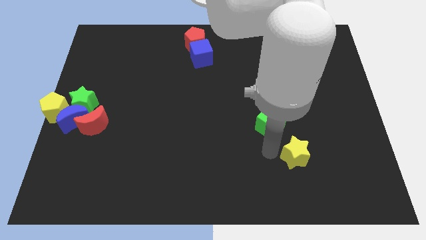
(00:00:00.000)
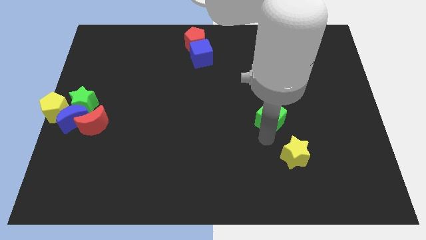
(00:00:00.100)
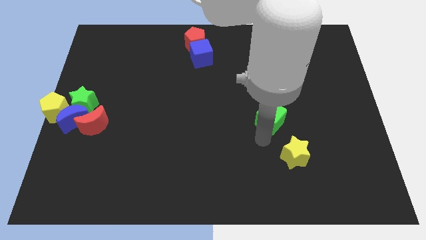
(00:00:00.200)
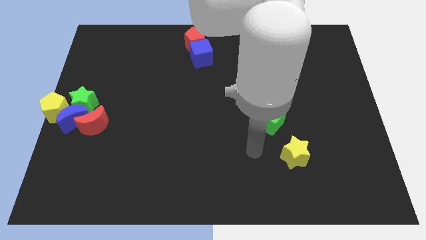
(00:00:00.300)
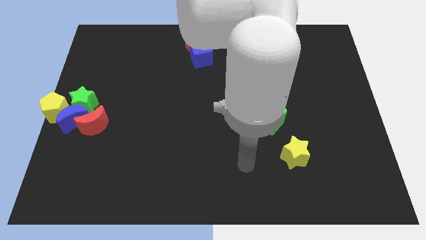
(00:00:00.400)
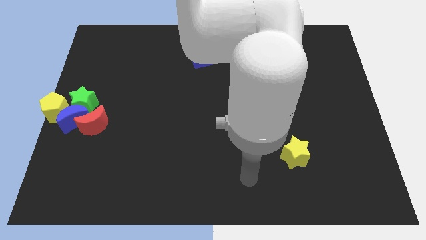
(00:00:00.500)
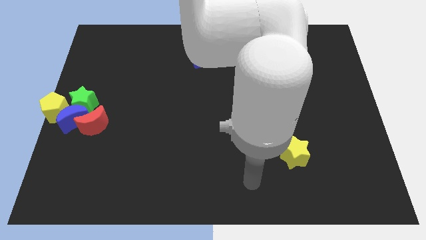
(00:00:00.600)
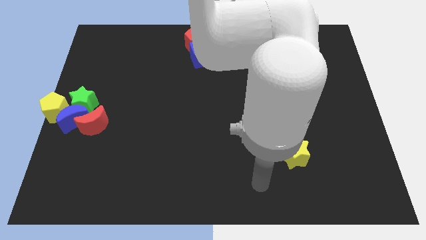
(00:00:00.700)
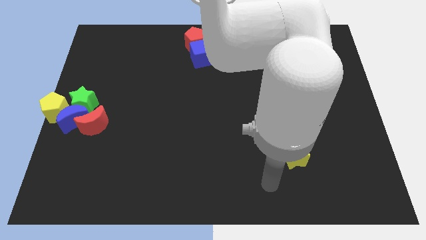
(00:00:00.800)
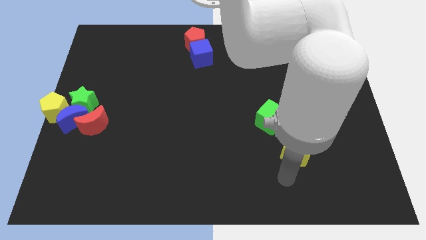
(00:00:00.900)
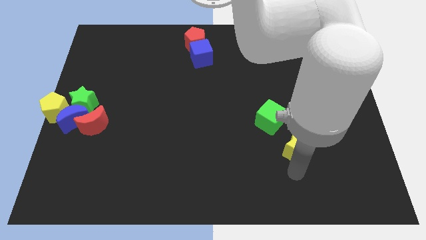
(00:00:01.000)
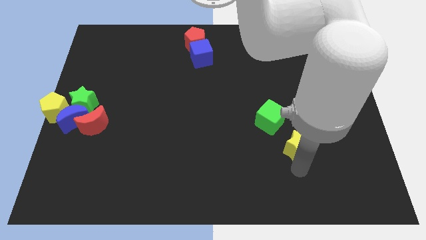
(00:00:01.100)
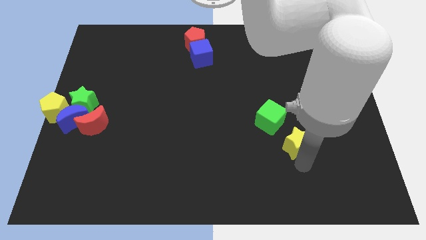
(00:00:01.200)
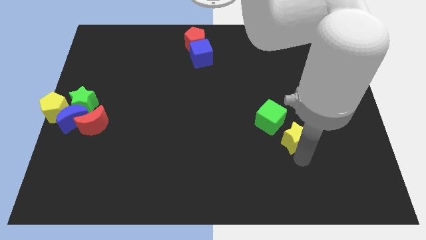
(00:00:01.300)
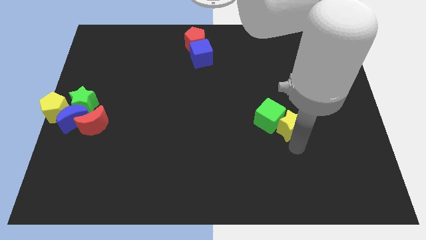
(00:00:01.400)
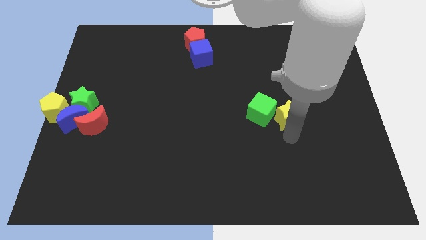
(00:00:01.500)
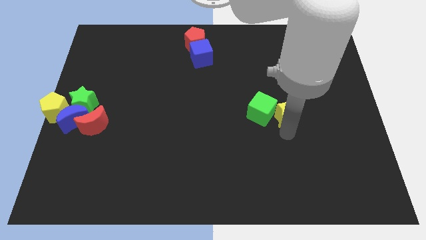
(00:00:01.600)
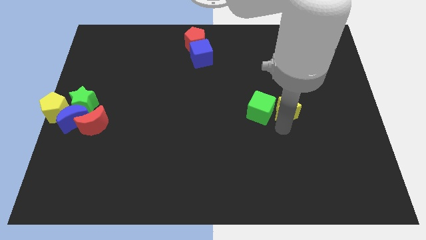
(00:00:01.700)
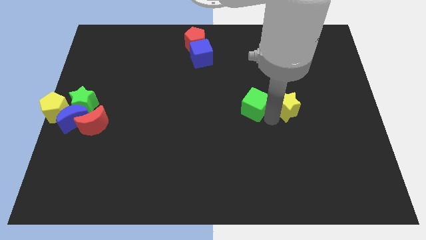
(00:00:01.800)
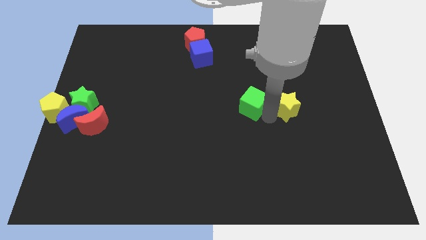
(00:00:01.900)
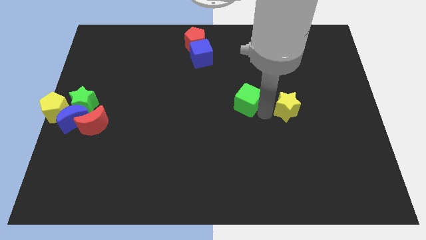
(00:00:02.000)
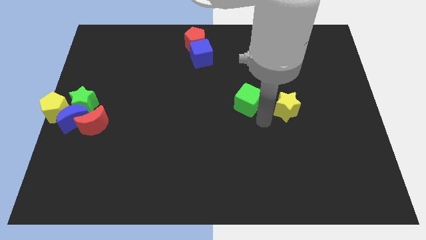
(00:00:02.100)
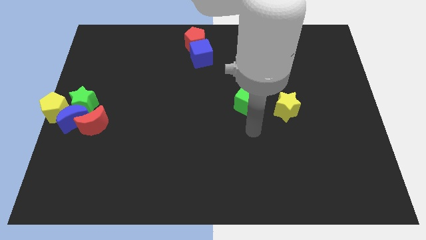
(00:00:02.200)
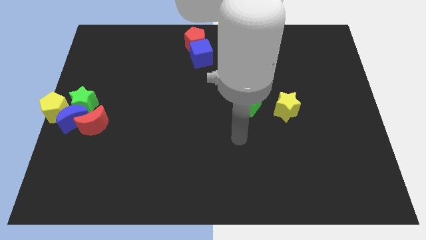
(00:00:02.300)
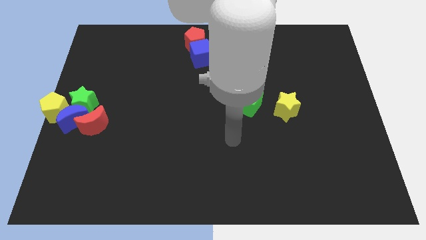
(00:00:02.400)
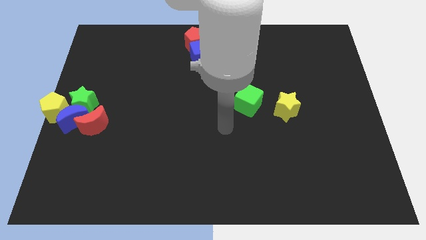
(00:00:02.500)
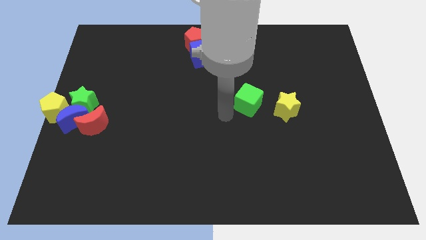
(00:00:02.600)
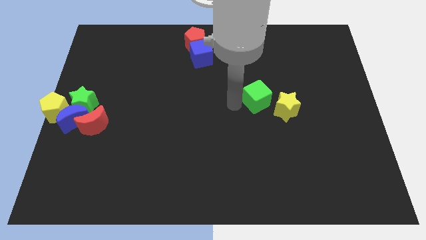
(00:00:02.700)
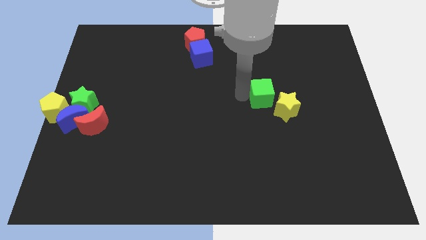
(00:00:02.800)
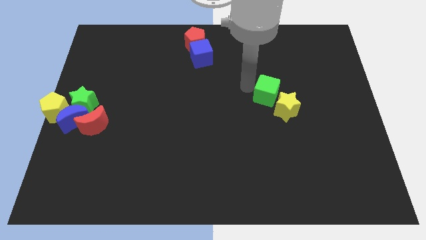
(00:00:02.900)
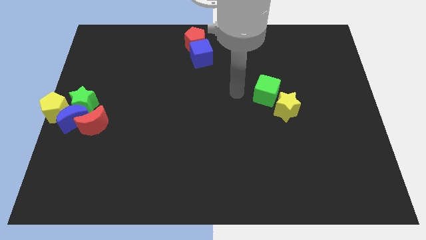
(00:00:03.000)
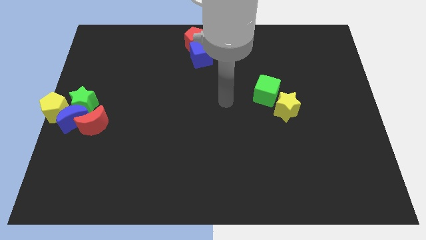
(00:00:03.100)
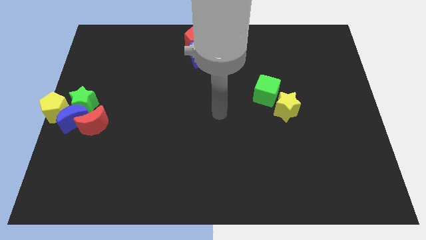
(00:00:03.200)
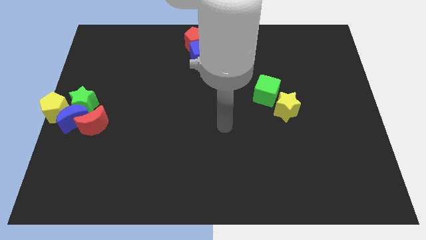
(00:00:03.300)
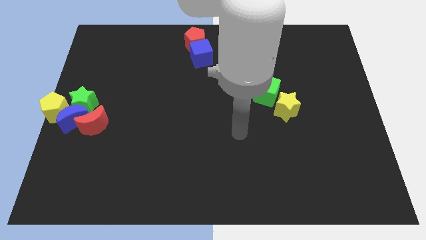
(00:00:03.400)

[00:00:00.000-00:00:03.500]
push the yellow star and the green cube upwards of the board

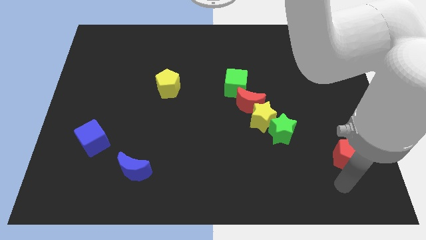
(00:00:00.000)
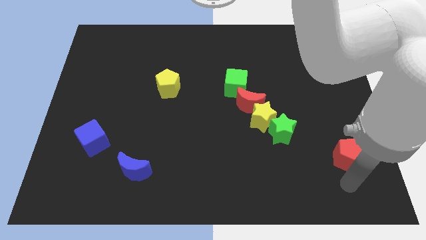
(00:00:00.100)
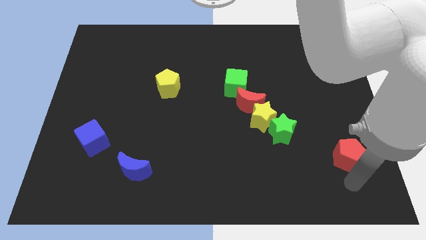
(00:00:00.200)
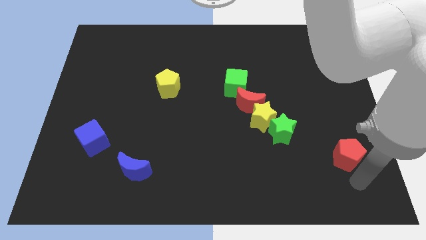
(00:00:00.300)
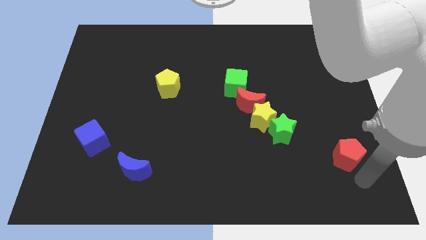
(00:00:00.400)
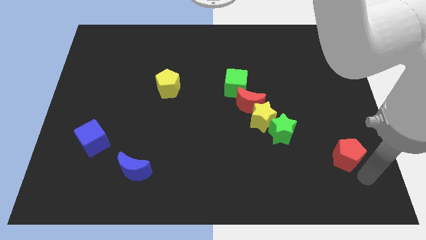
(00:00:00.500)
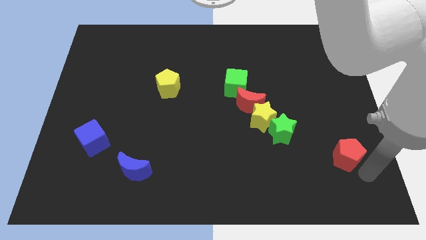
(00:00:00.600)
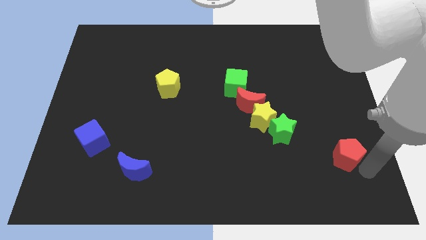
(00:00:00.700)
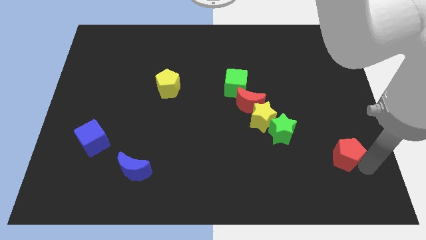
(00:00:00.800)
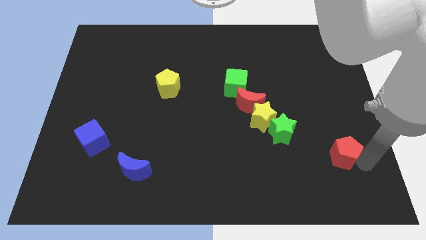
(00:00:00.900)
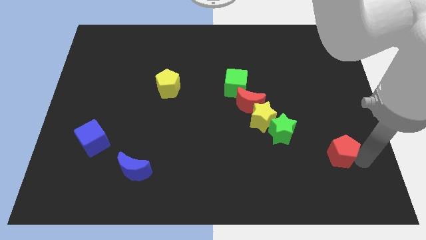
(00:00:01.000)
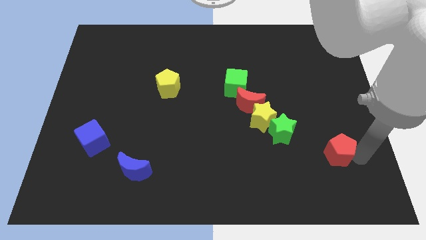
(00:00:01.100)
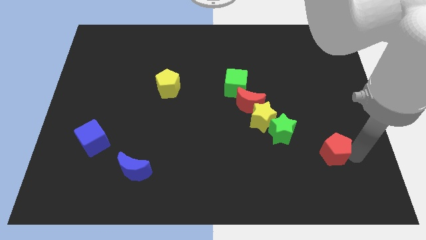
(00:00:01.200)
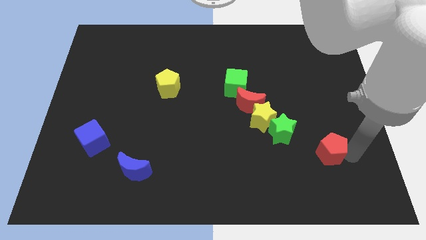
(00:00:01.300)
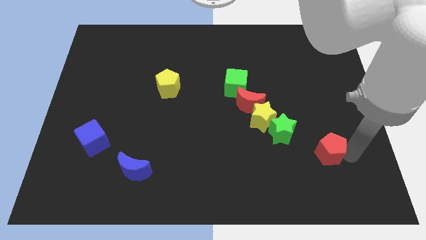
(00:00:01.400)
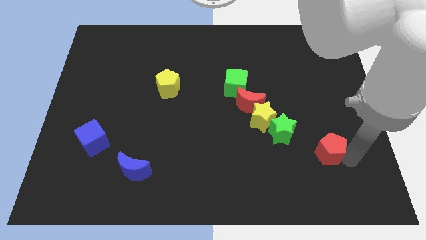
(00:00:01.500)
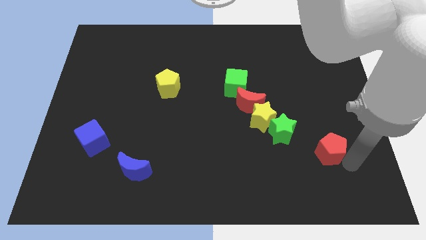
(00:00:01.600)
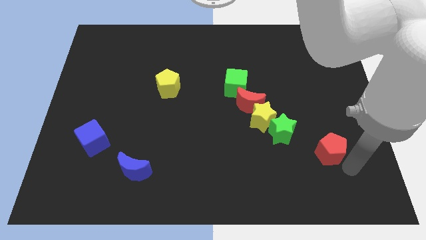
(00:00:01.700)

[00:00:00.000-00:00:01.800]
move the red pentagon towards the green star

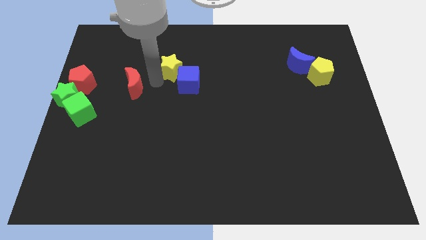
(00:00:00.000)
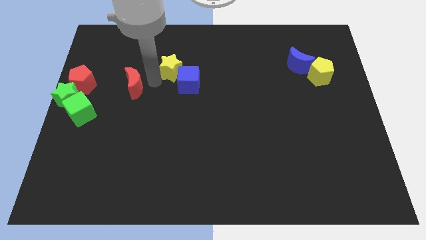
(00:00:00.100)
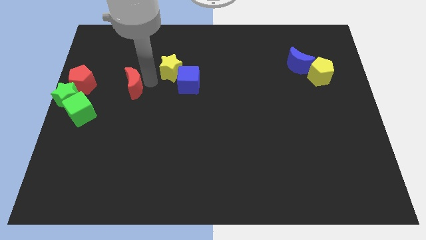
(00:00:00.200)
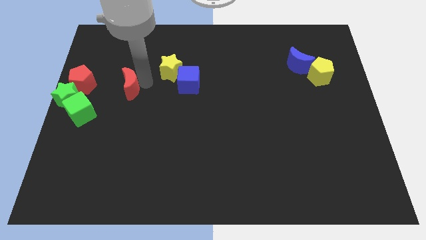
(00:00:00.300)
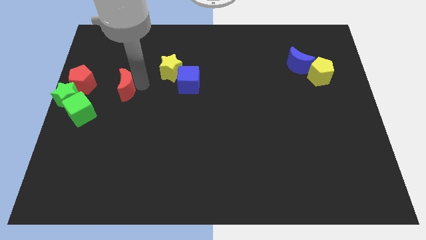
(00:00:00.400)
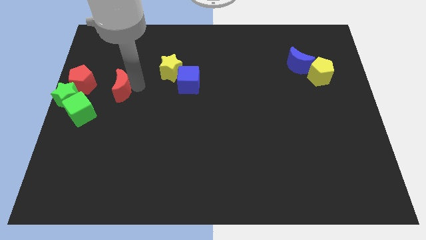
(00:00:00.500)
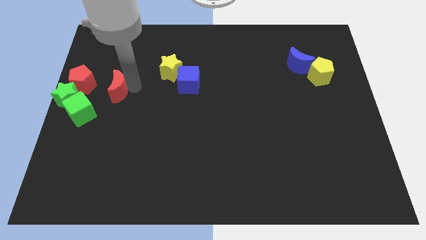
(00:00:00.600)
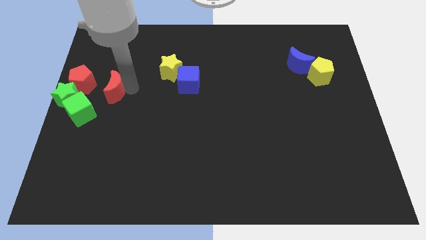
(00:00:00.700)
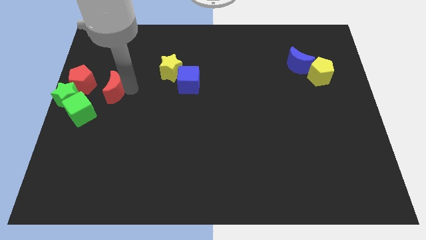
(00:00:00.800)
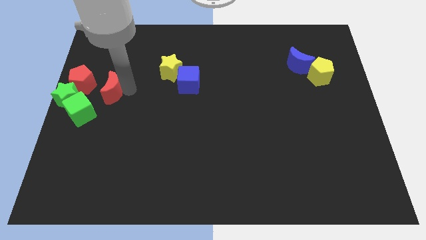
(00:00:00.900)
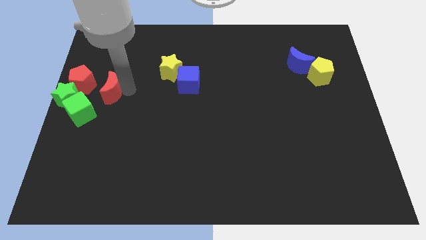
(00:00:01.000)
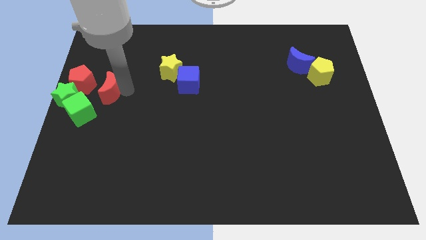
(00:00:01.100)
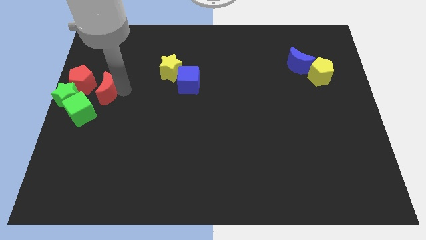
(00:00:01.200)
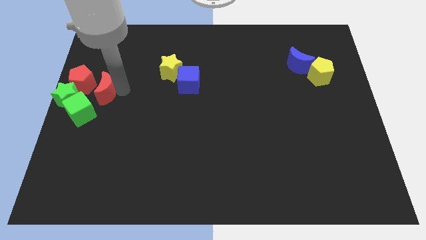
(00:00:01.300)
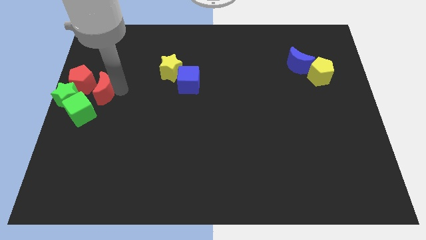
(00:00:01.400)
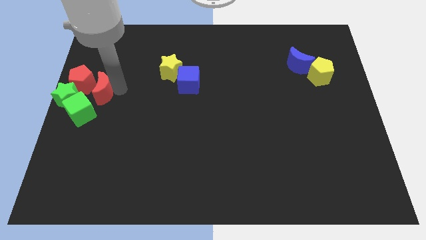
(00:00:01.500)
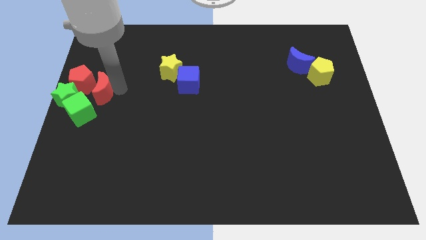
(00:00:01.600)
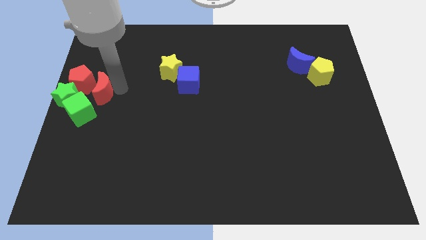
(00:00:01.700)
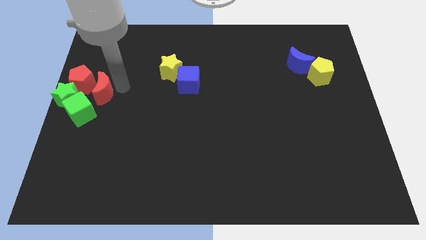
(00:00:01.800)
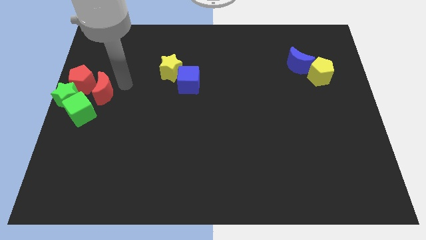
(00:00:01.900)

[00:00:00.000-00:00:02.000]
move the red moon to the right of the red pentagon

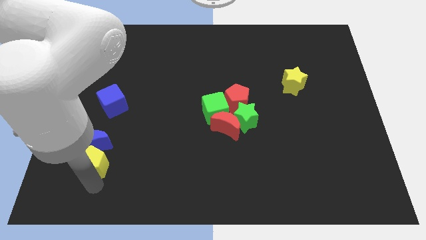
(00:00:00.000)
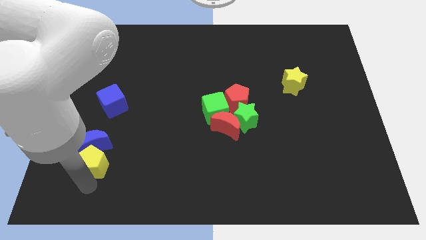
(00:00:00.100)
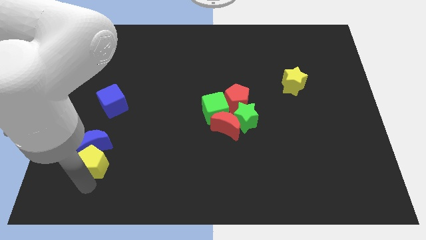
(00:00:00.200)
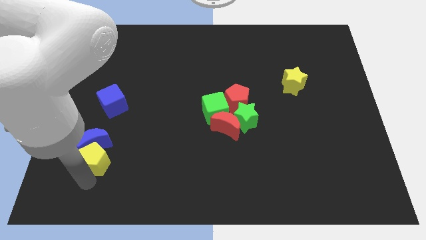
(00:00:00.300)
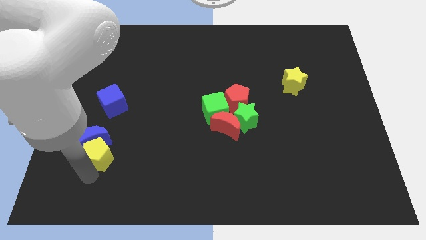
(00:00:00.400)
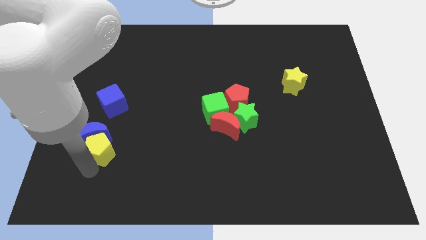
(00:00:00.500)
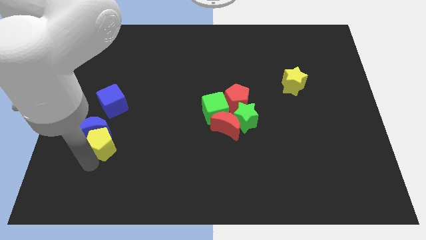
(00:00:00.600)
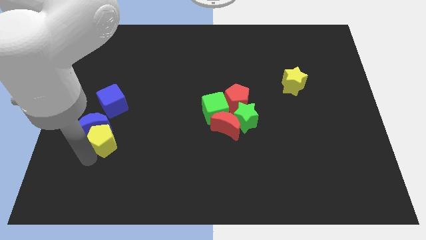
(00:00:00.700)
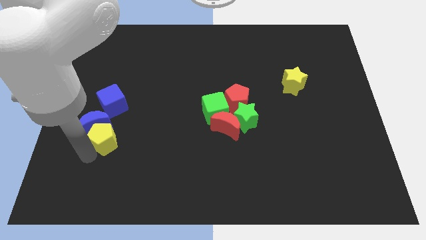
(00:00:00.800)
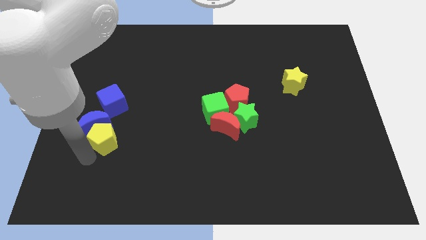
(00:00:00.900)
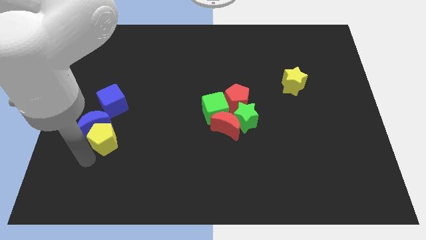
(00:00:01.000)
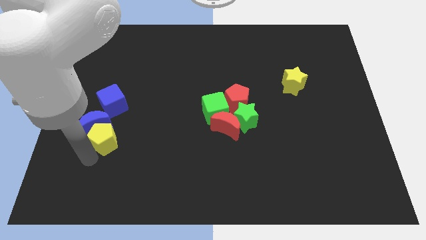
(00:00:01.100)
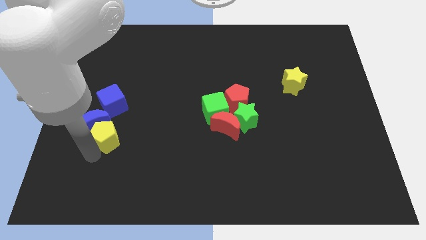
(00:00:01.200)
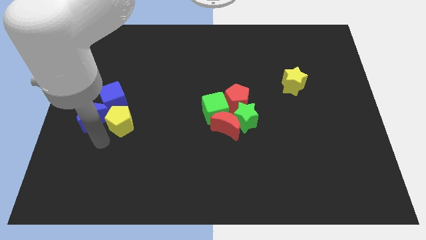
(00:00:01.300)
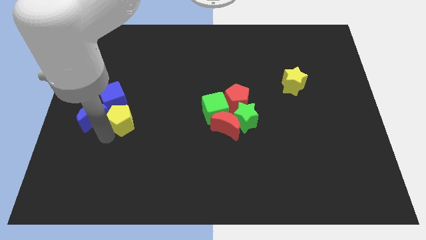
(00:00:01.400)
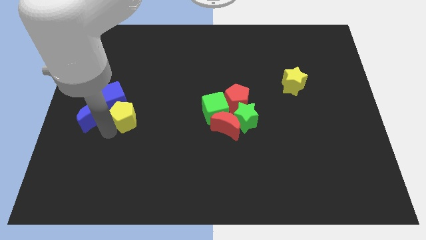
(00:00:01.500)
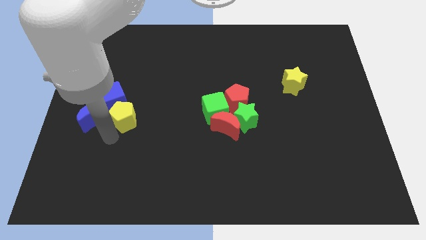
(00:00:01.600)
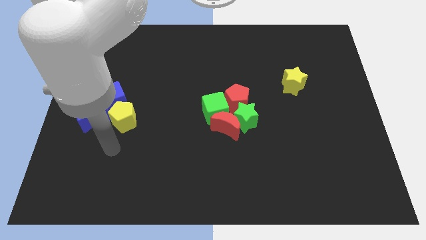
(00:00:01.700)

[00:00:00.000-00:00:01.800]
push the yellow pentagon into the blue moon
